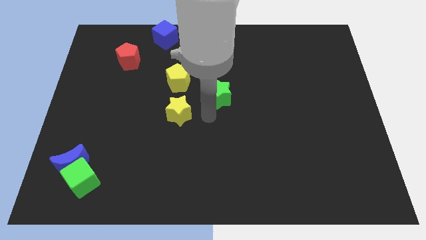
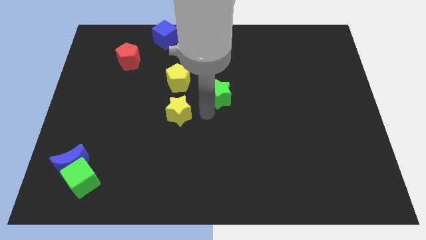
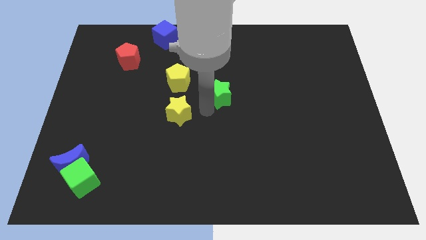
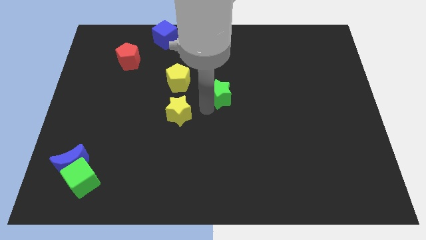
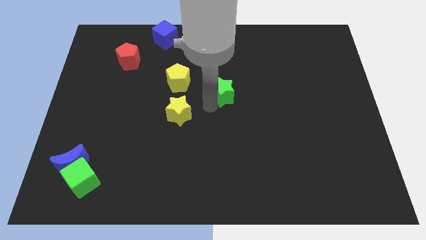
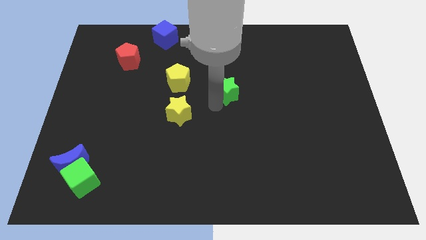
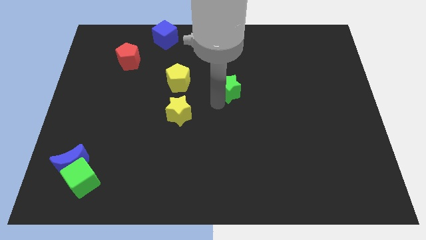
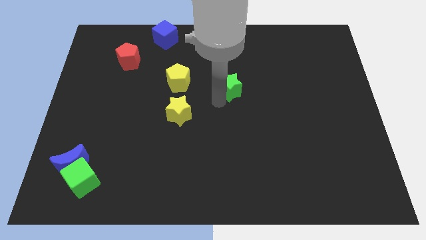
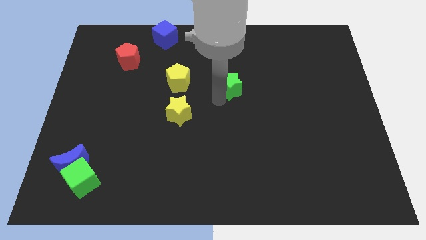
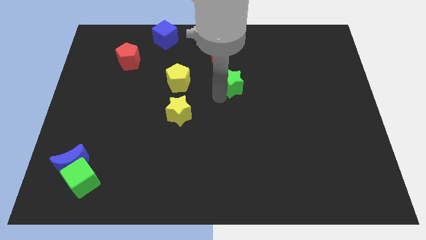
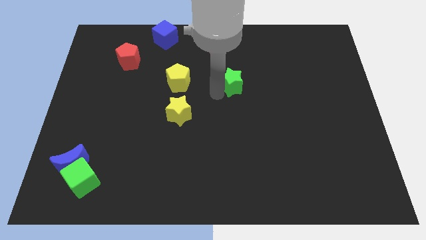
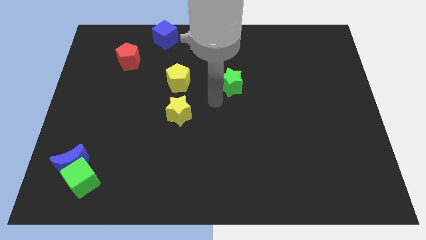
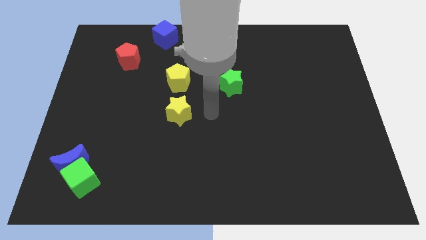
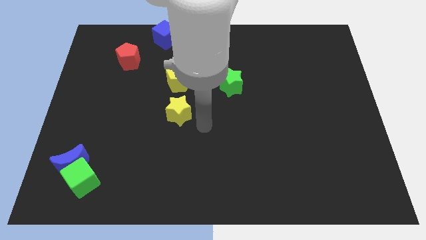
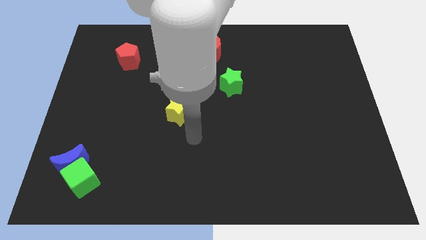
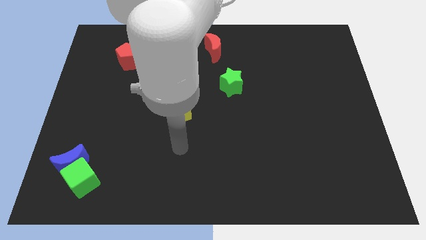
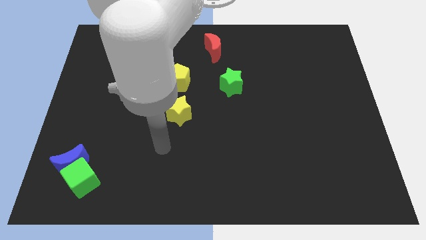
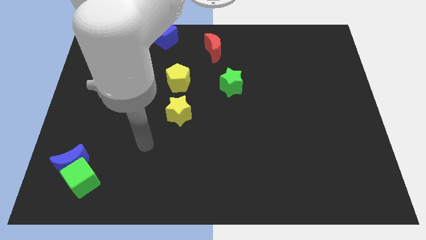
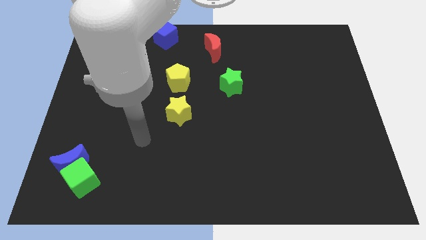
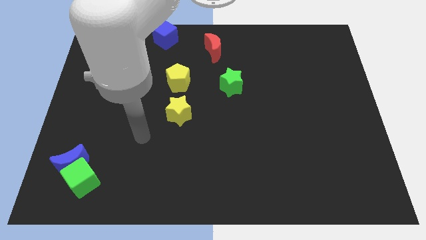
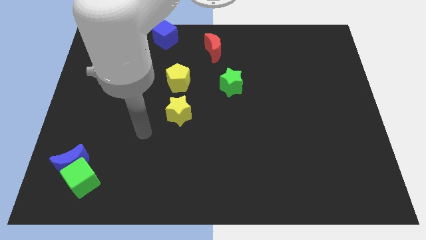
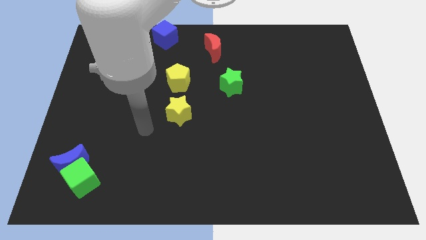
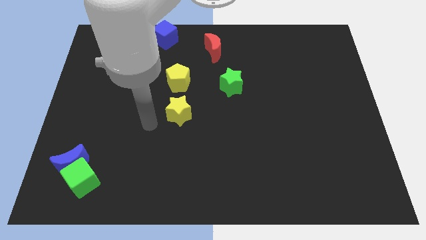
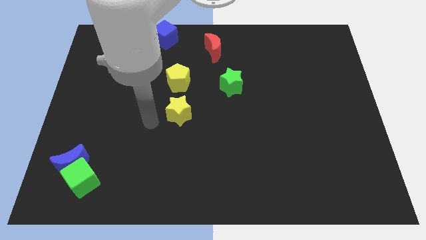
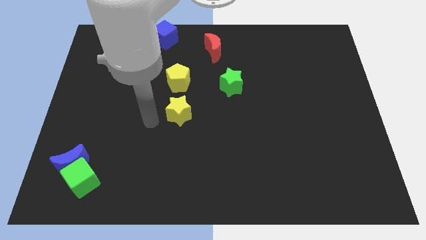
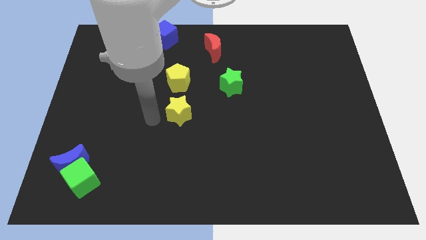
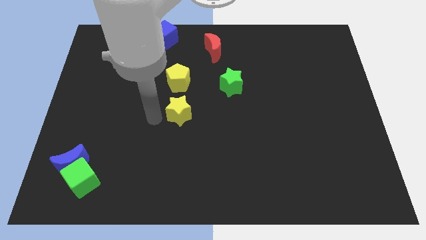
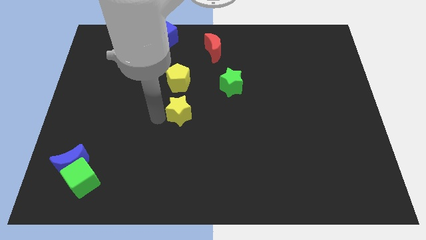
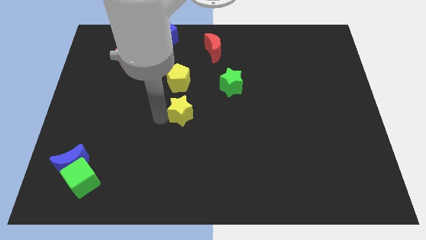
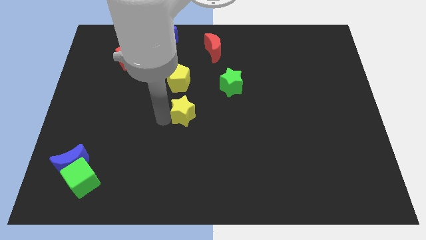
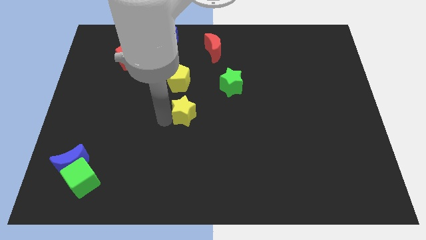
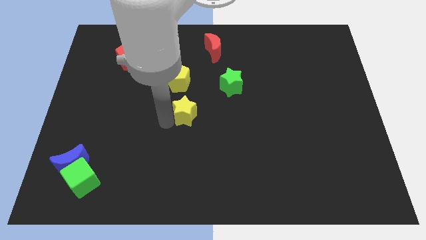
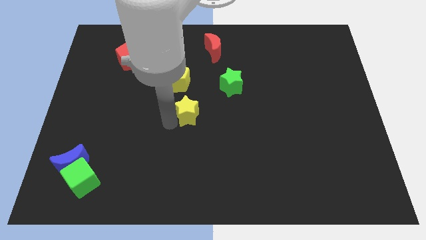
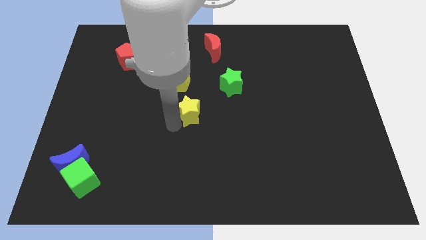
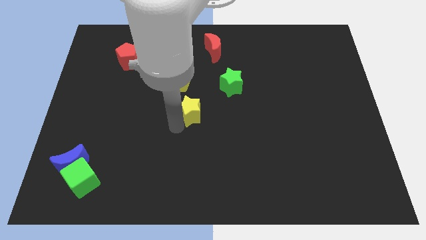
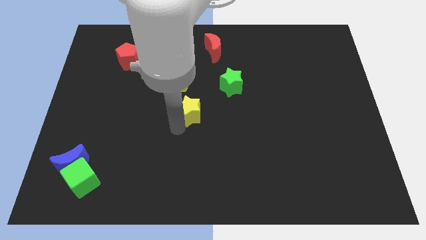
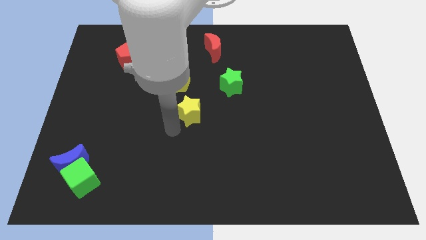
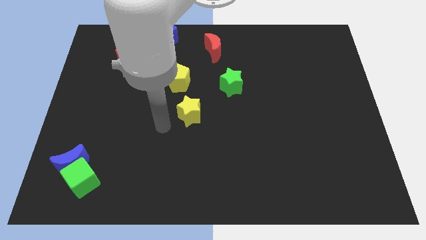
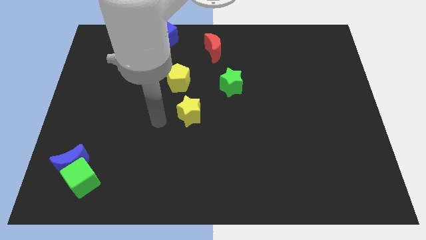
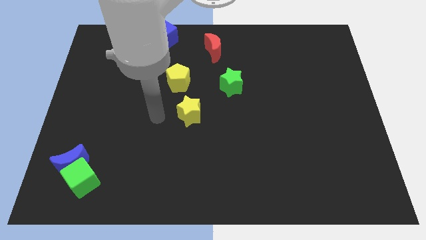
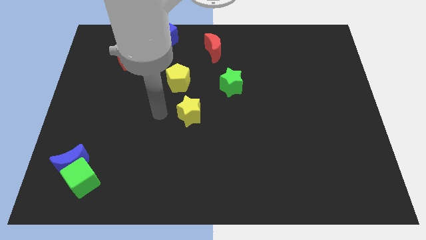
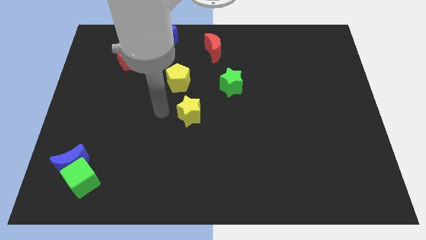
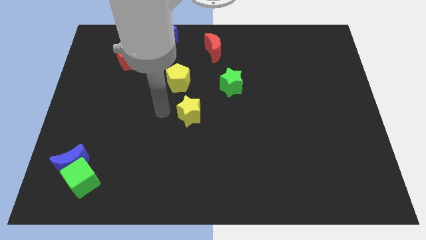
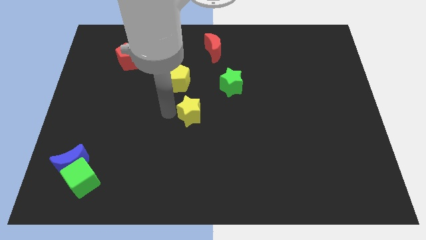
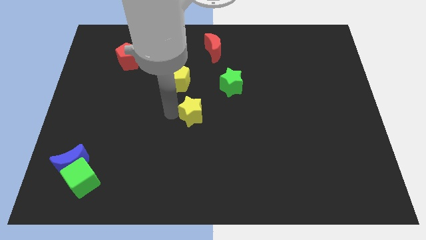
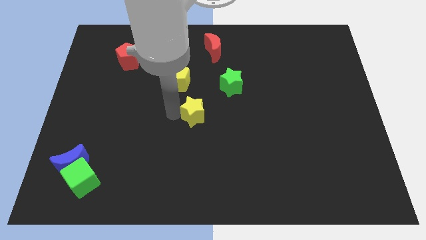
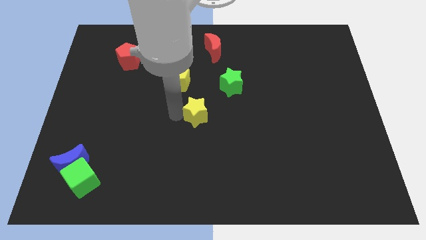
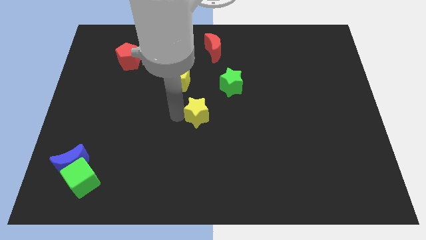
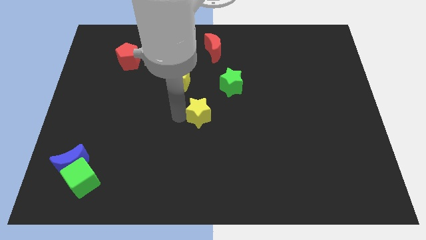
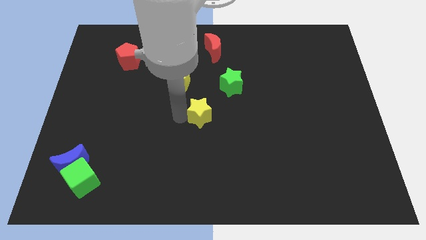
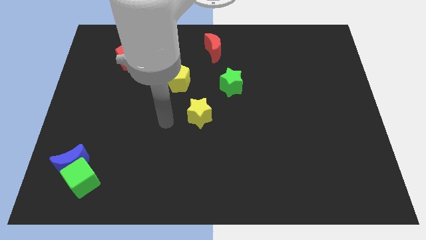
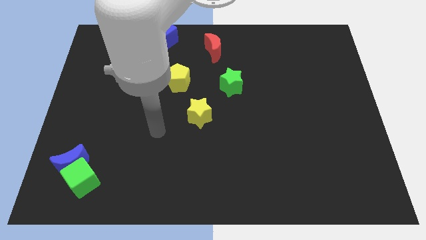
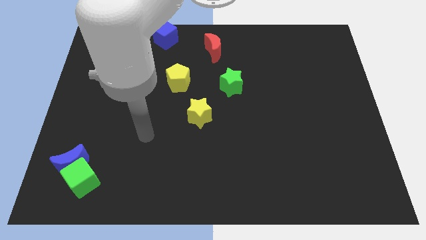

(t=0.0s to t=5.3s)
put the green star and yellow star diagonally

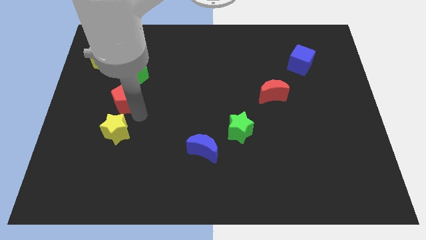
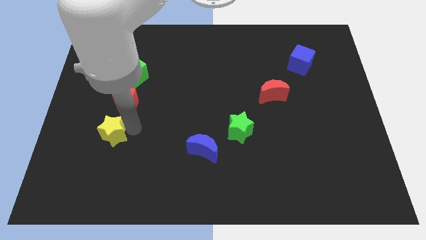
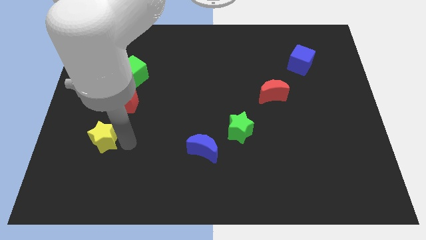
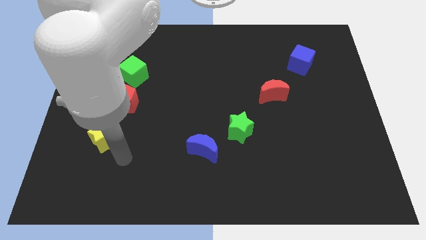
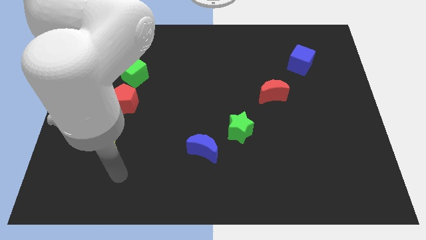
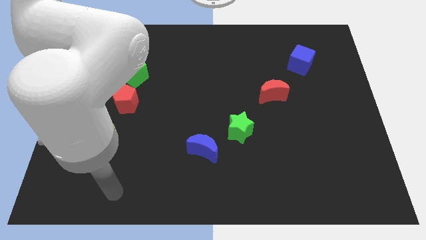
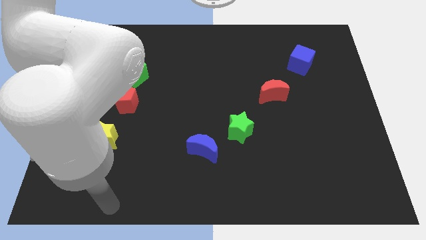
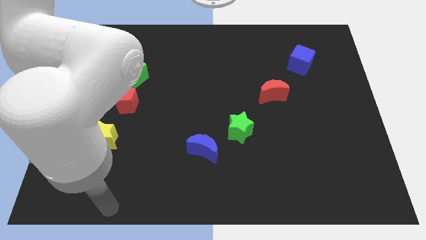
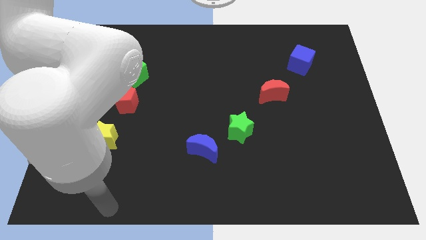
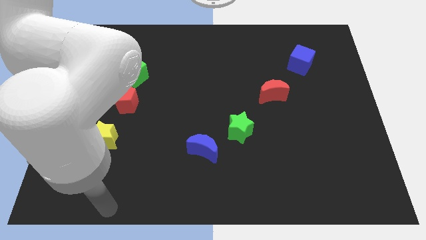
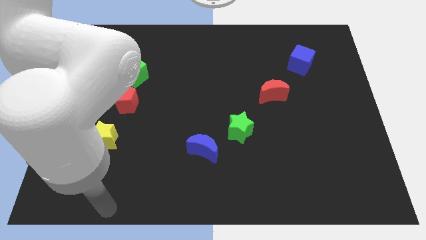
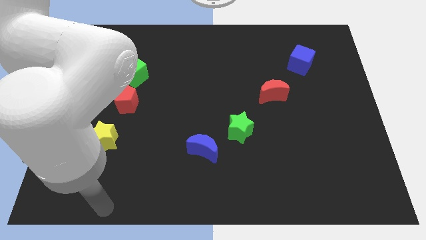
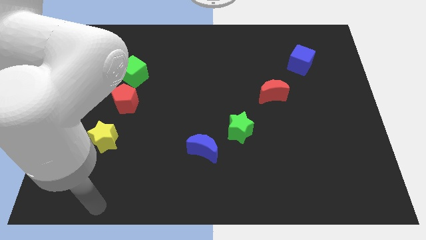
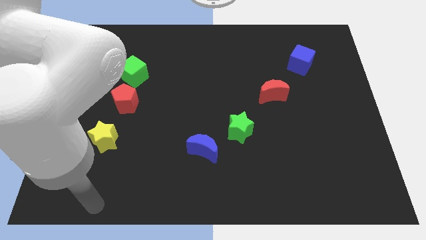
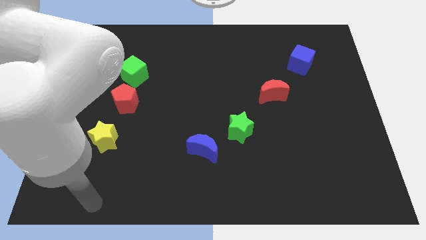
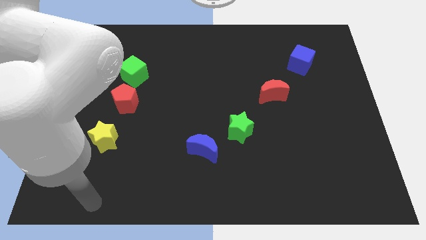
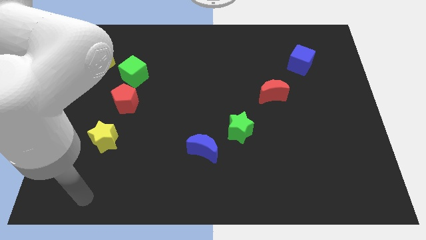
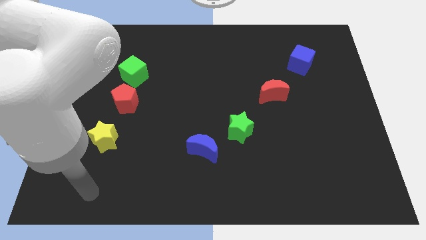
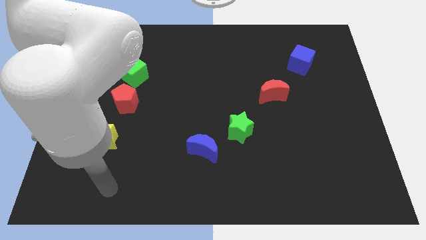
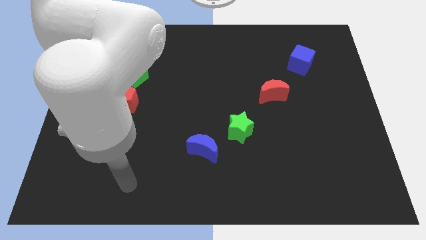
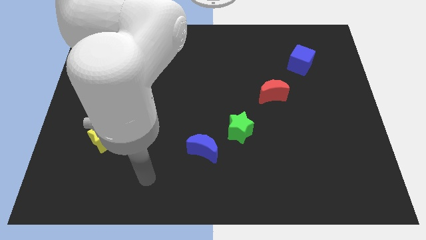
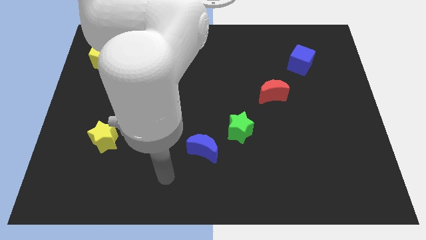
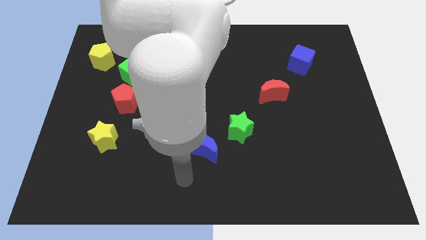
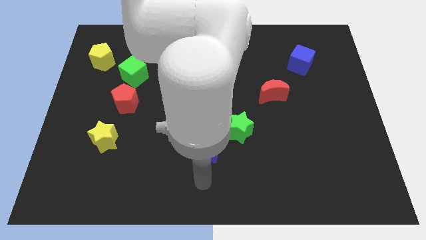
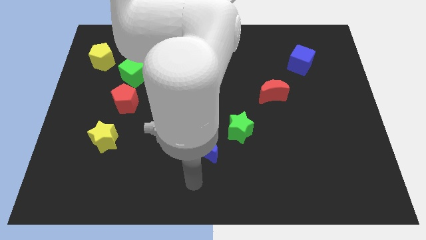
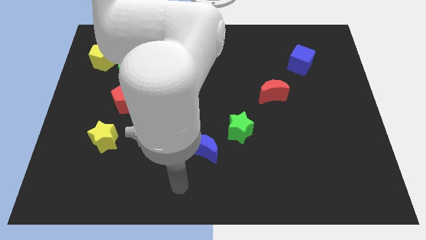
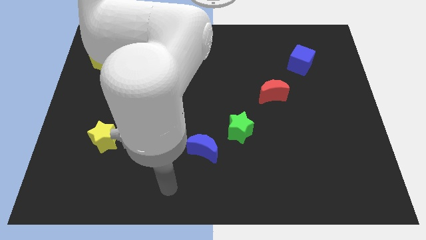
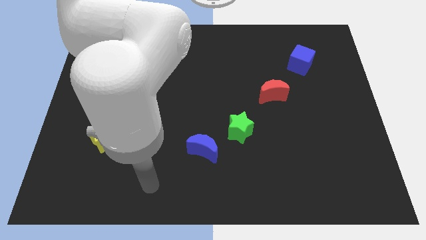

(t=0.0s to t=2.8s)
push yellow start slightly down

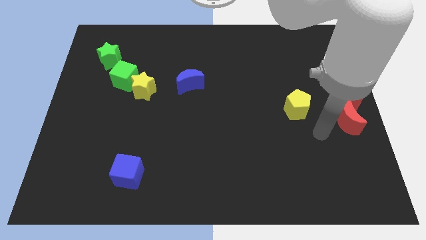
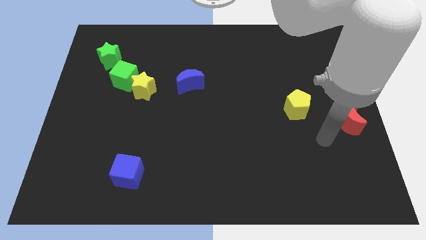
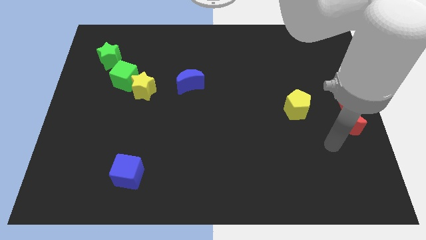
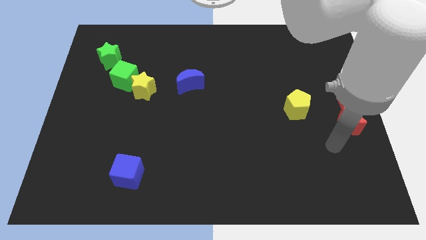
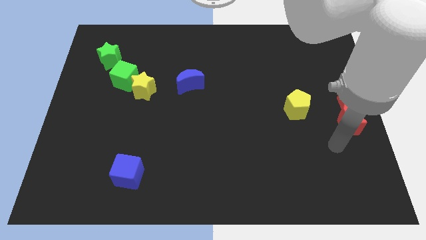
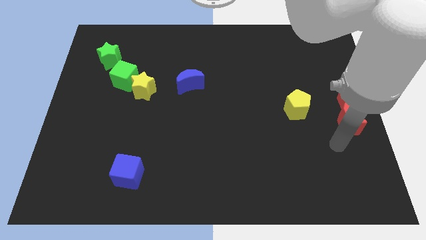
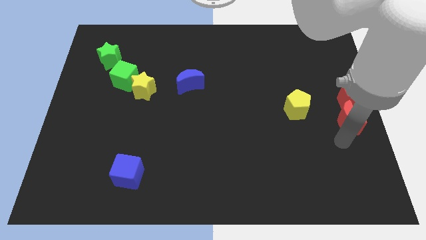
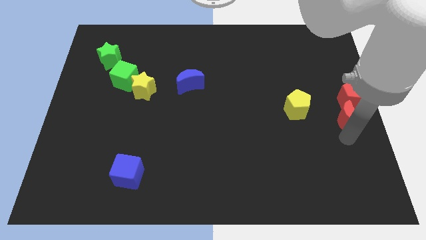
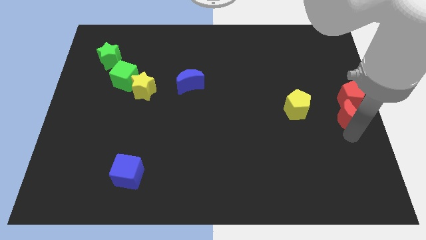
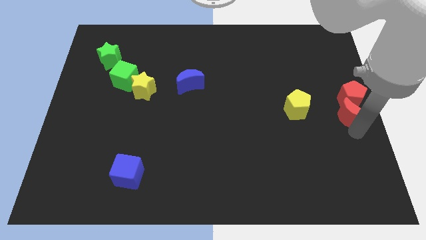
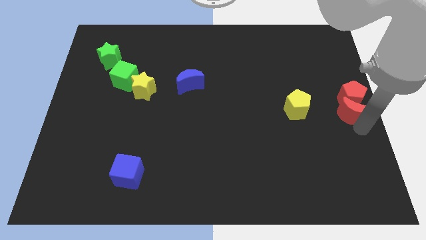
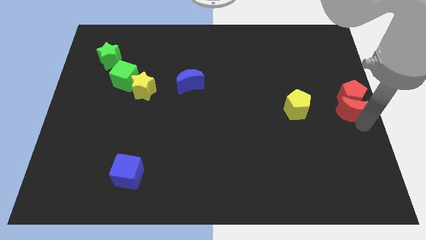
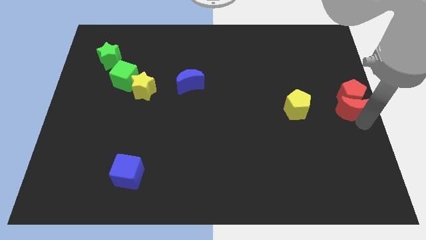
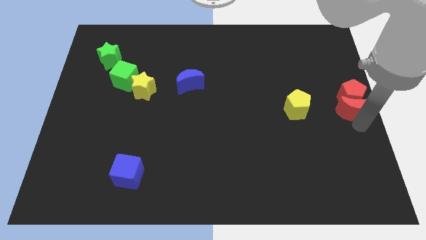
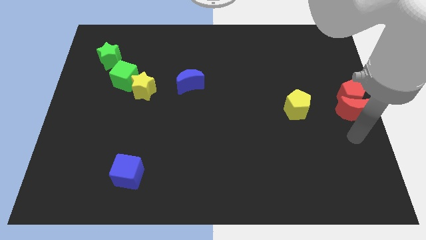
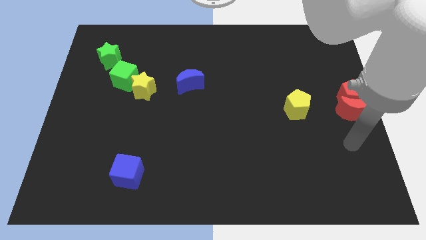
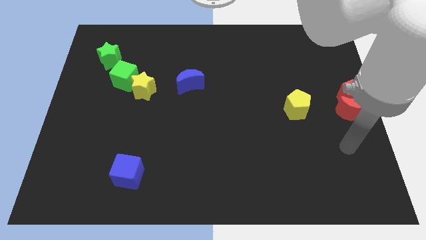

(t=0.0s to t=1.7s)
push the red crescent into the red pentagon
